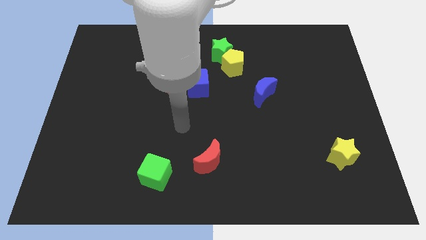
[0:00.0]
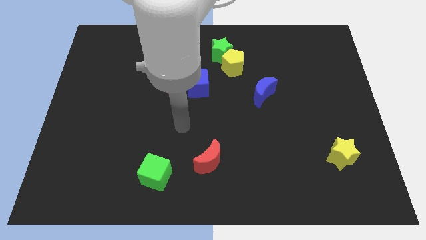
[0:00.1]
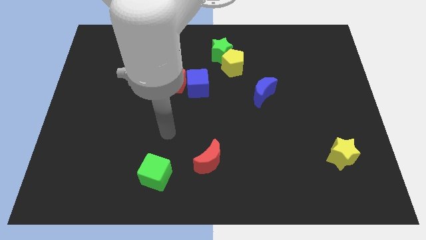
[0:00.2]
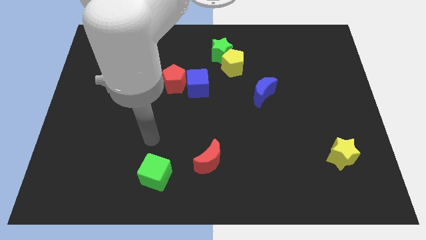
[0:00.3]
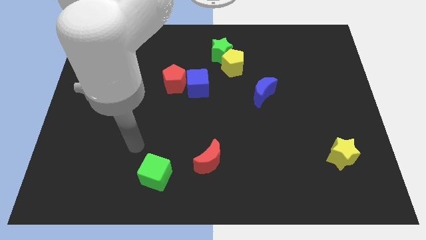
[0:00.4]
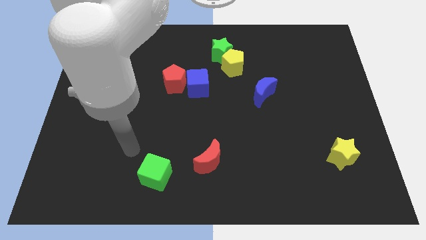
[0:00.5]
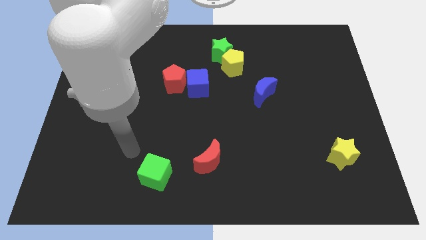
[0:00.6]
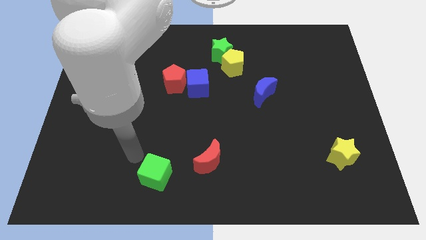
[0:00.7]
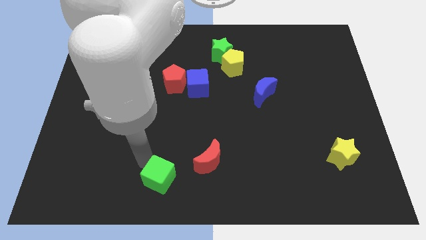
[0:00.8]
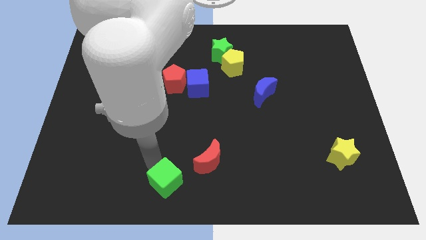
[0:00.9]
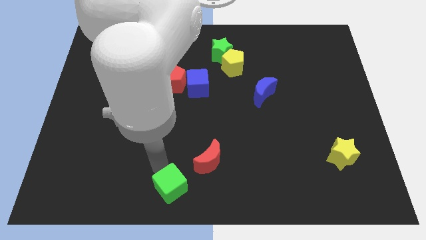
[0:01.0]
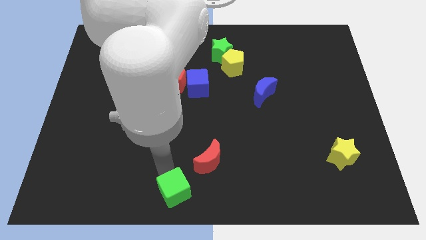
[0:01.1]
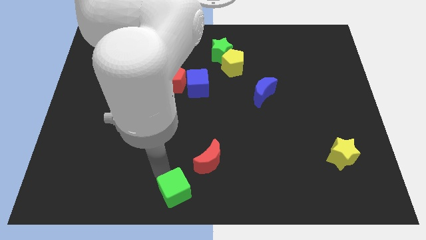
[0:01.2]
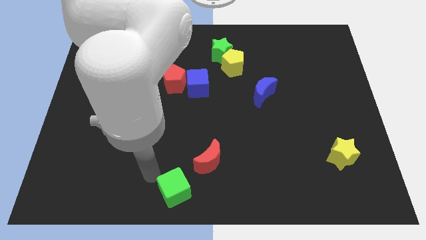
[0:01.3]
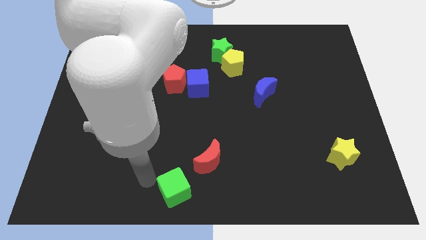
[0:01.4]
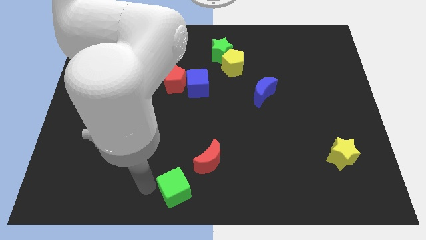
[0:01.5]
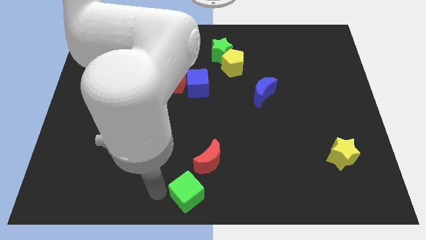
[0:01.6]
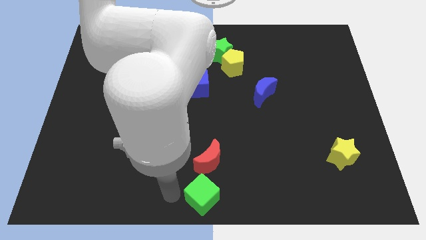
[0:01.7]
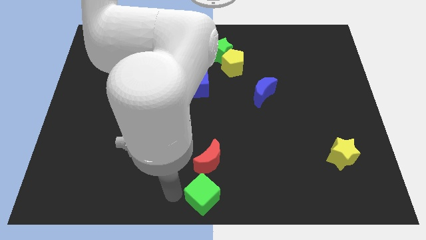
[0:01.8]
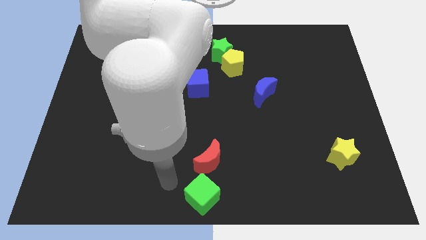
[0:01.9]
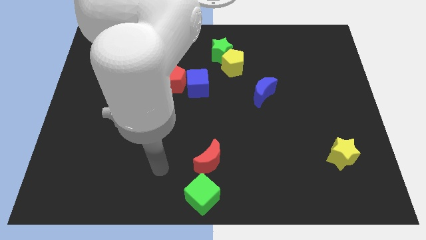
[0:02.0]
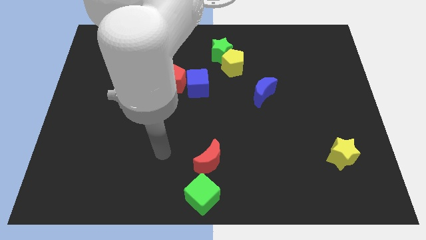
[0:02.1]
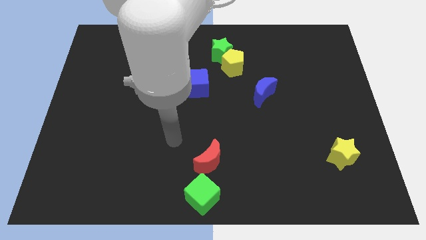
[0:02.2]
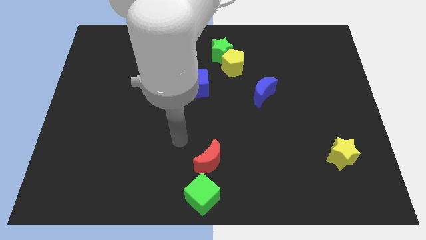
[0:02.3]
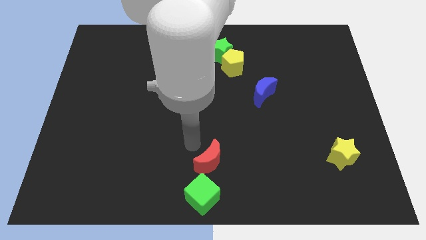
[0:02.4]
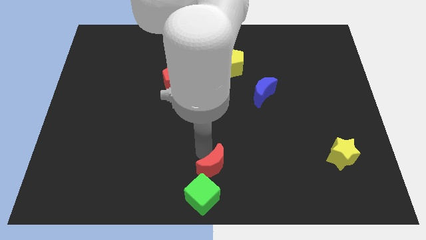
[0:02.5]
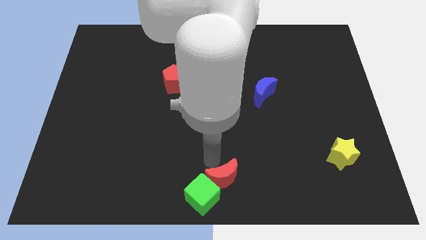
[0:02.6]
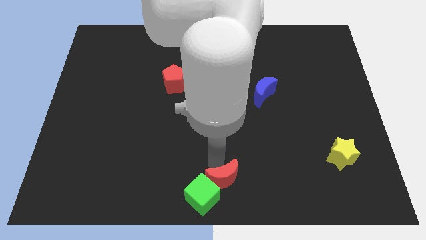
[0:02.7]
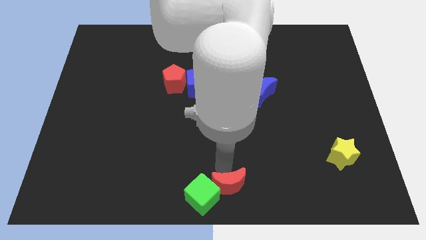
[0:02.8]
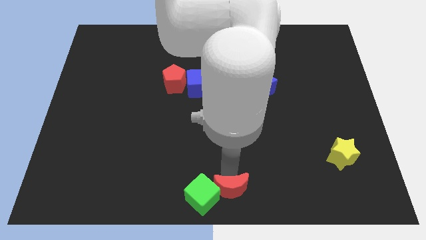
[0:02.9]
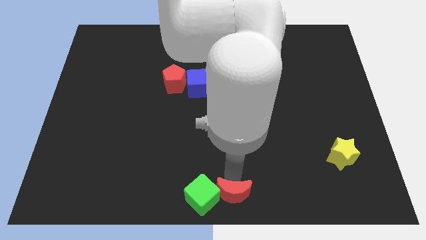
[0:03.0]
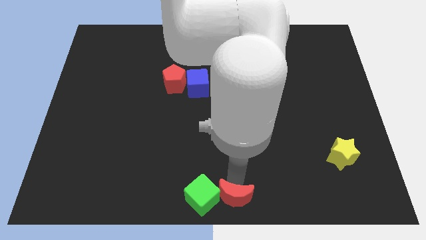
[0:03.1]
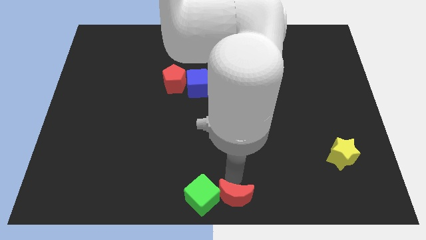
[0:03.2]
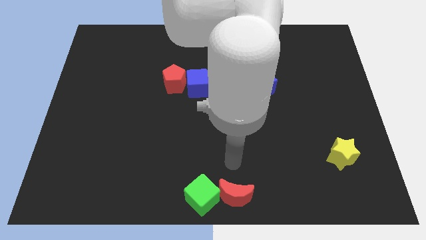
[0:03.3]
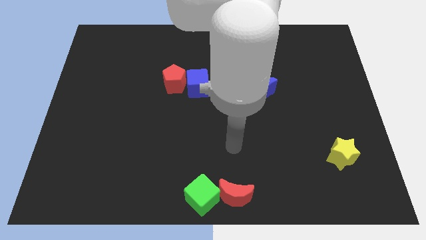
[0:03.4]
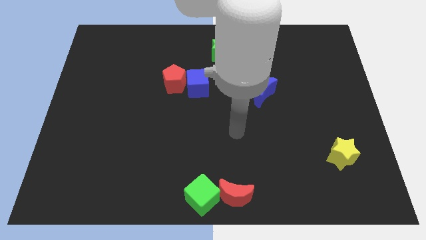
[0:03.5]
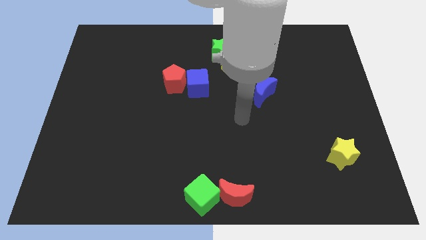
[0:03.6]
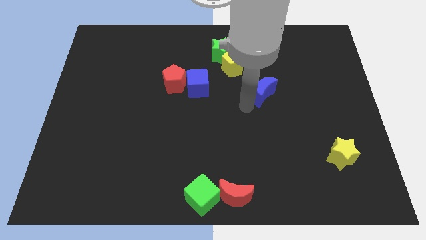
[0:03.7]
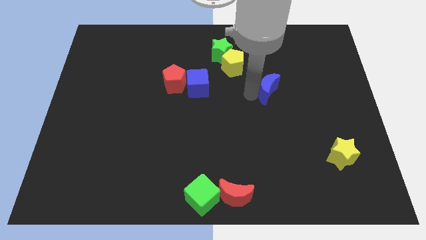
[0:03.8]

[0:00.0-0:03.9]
put the green cube and red moon at the bottom center of the board

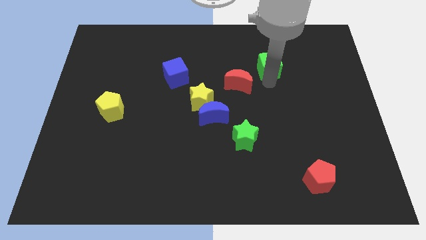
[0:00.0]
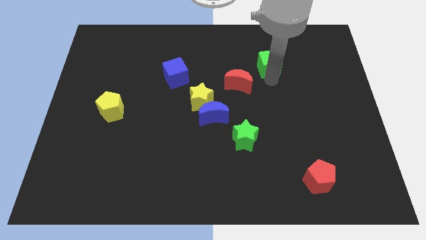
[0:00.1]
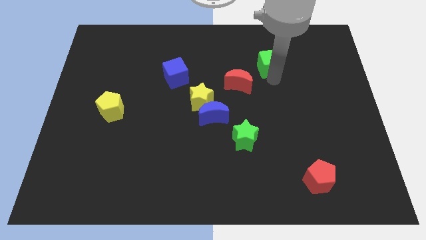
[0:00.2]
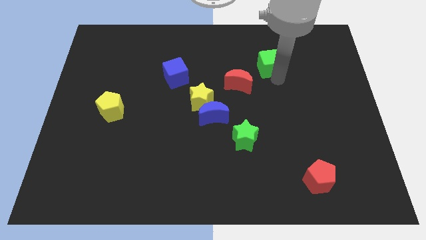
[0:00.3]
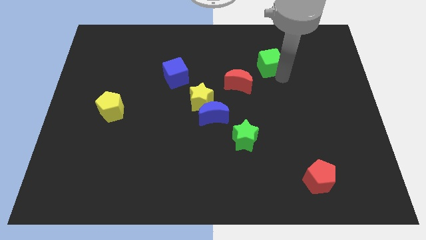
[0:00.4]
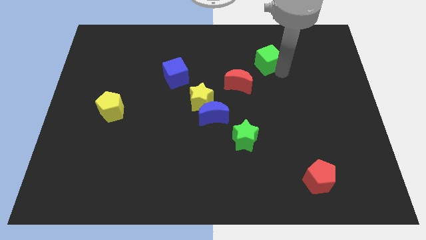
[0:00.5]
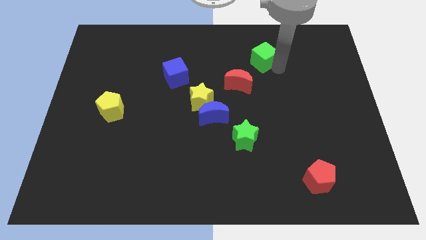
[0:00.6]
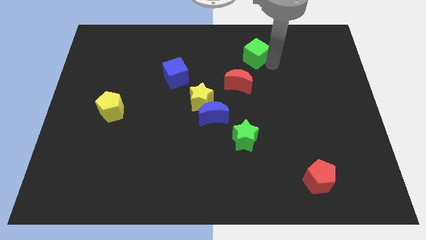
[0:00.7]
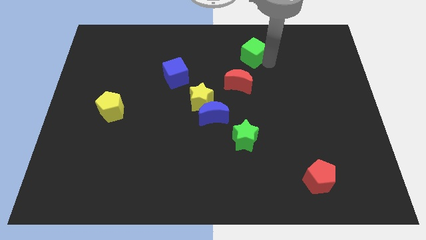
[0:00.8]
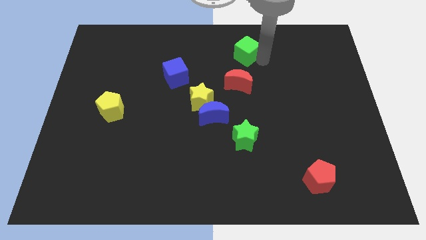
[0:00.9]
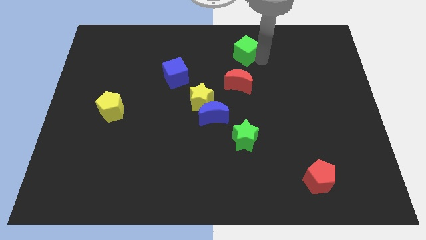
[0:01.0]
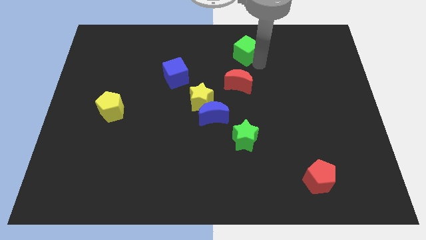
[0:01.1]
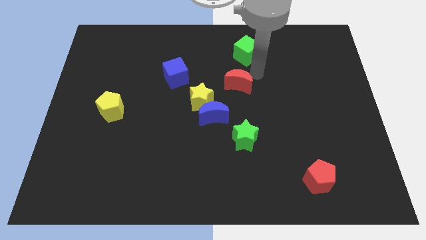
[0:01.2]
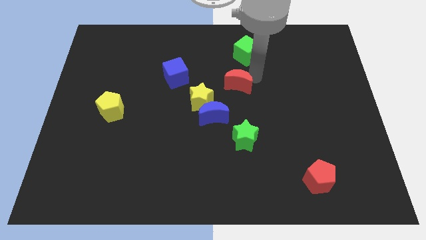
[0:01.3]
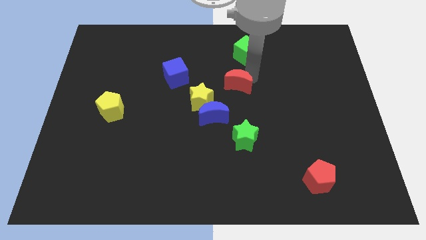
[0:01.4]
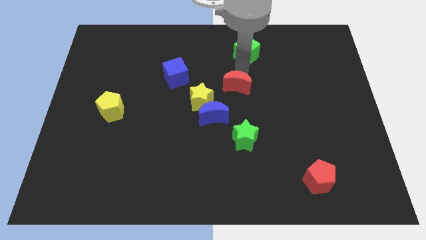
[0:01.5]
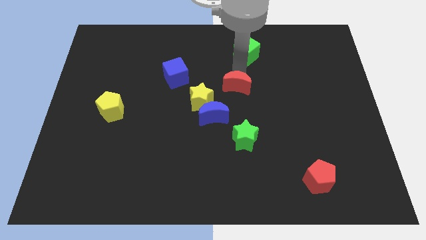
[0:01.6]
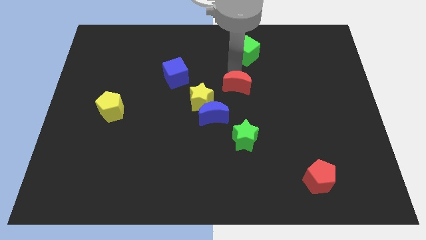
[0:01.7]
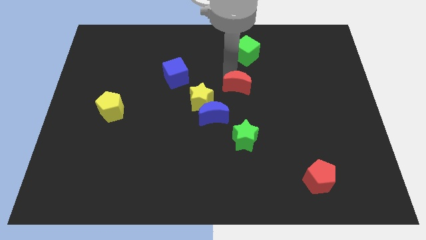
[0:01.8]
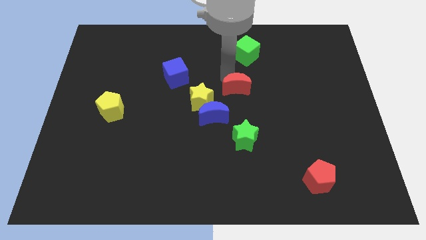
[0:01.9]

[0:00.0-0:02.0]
place the green cube above the red crescent

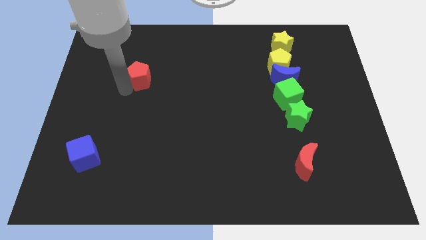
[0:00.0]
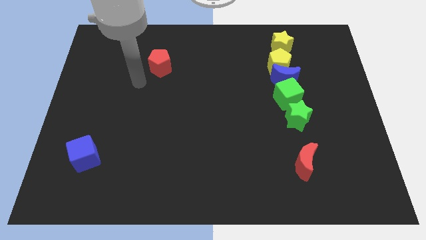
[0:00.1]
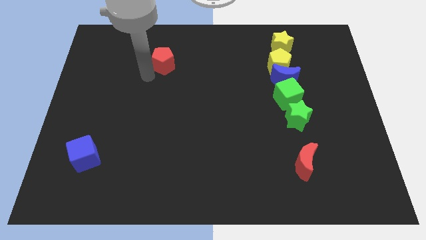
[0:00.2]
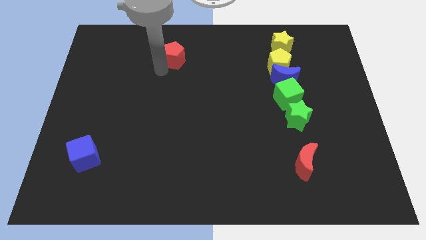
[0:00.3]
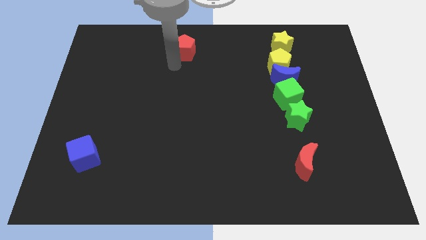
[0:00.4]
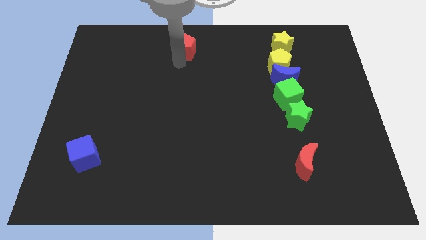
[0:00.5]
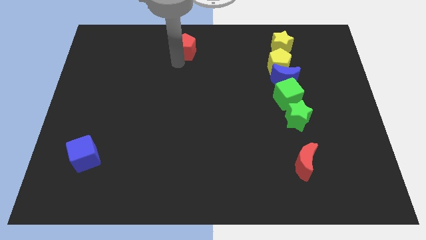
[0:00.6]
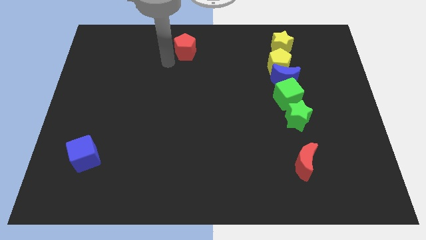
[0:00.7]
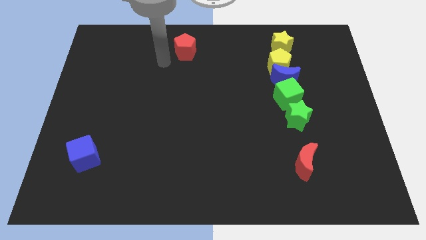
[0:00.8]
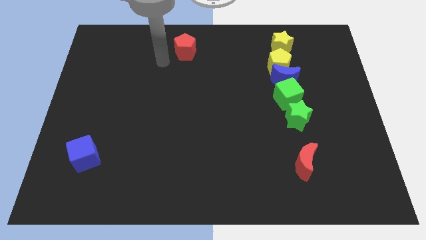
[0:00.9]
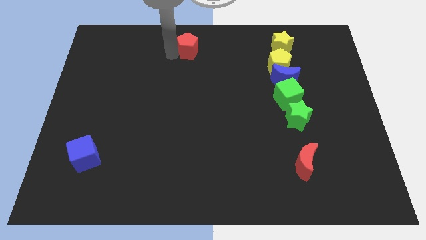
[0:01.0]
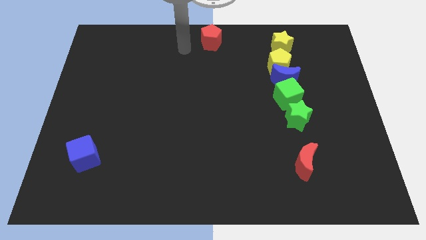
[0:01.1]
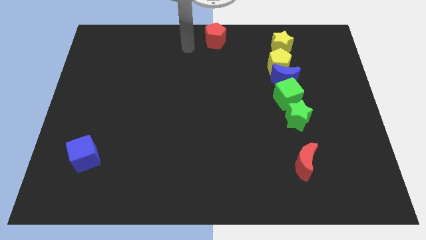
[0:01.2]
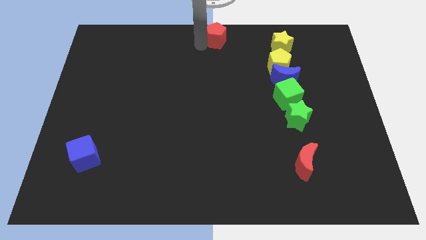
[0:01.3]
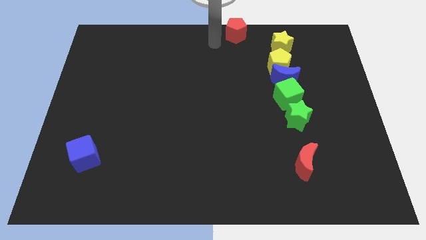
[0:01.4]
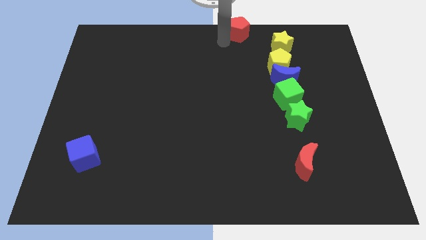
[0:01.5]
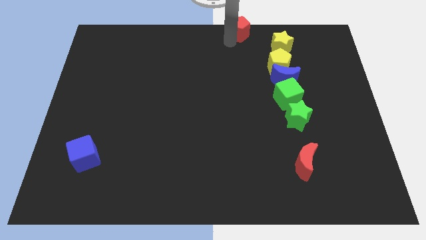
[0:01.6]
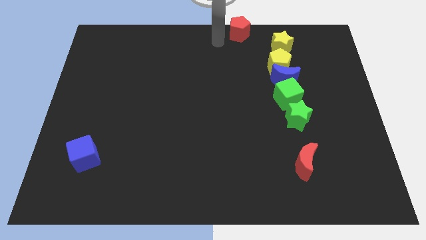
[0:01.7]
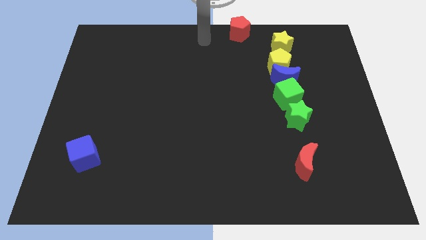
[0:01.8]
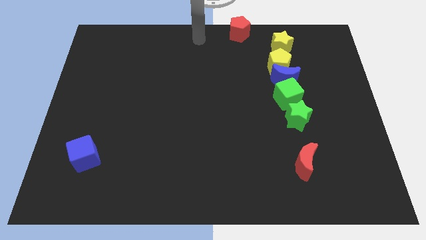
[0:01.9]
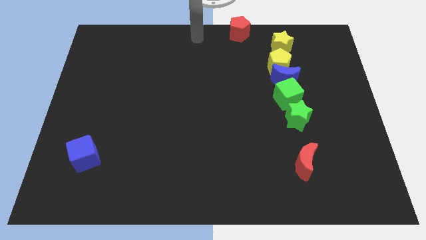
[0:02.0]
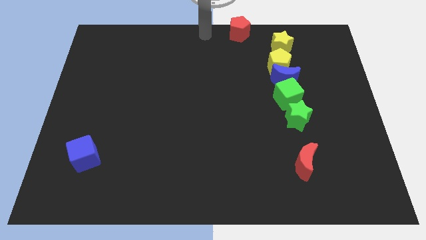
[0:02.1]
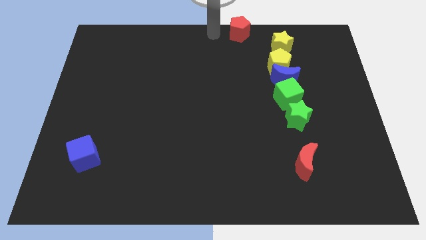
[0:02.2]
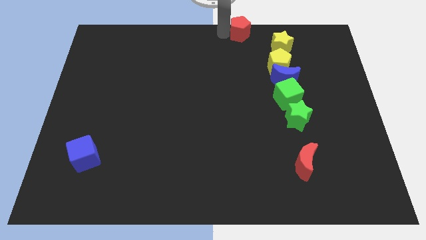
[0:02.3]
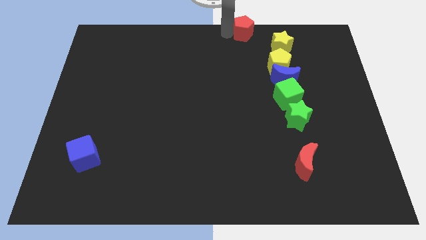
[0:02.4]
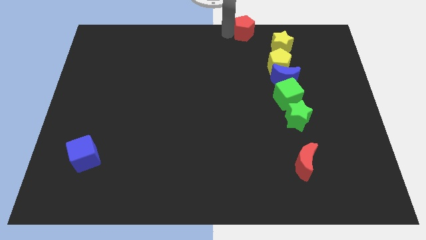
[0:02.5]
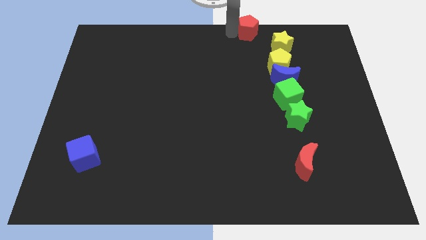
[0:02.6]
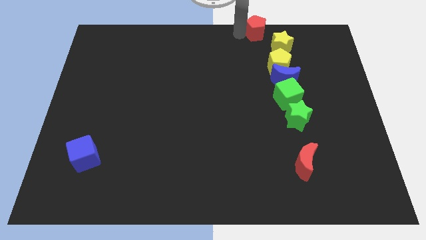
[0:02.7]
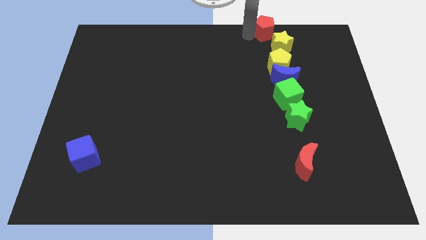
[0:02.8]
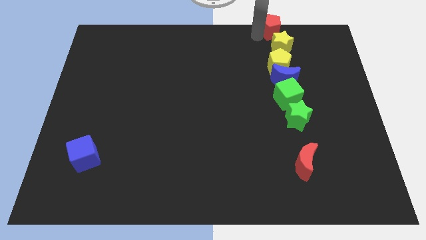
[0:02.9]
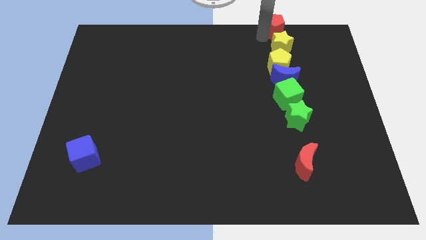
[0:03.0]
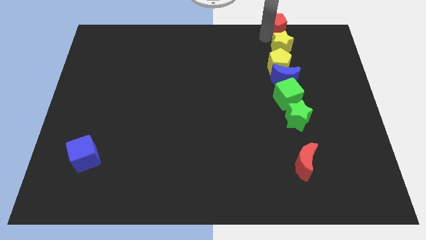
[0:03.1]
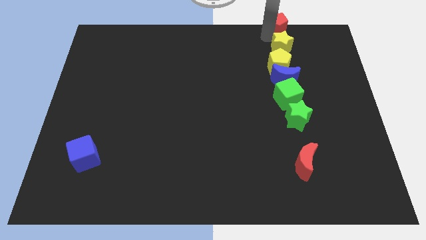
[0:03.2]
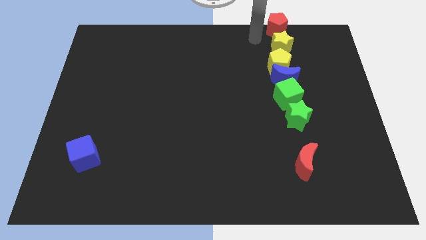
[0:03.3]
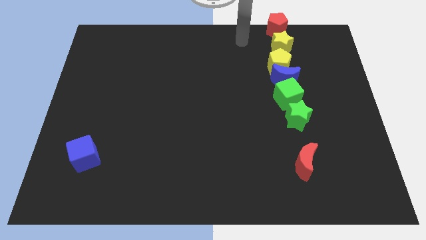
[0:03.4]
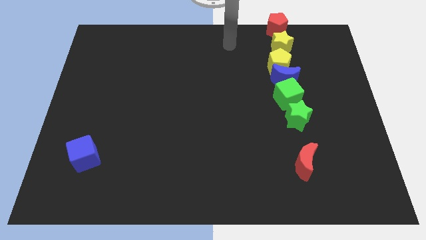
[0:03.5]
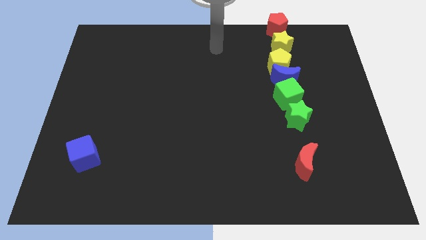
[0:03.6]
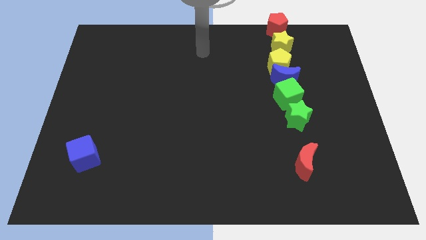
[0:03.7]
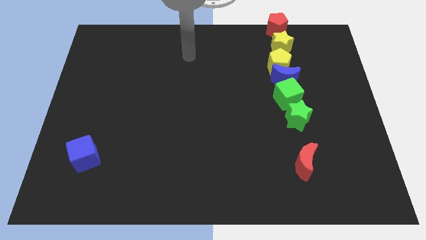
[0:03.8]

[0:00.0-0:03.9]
place the red pentagon above the yellow star
